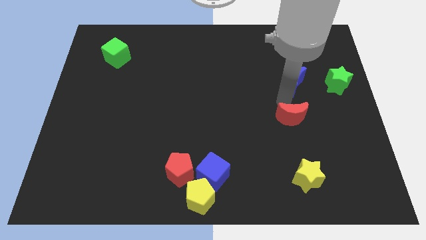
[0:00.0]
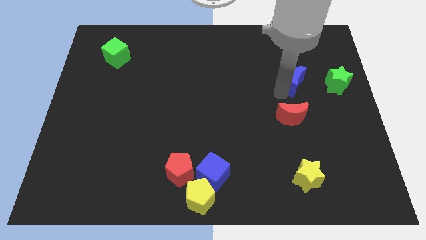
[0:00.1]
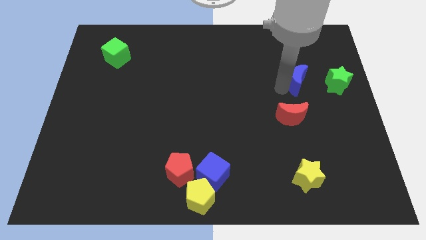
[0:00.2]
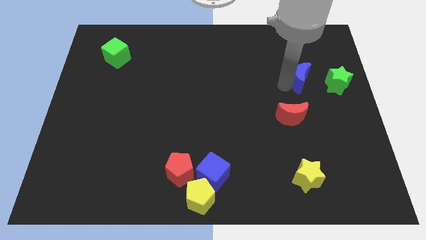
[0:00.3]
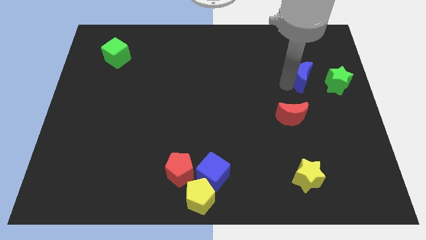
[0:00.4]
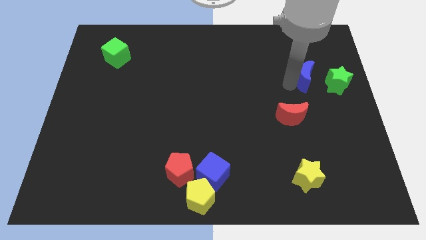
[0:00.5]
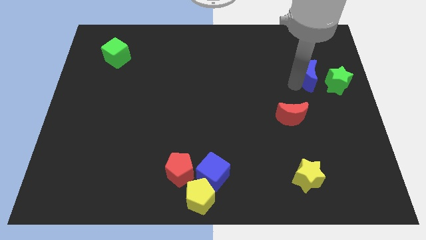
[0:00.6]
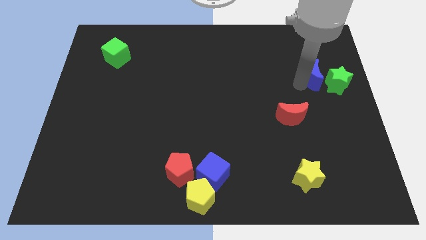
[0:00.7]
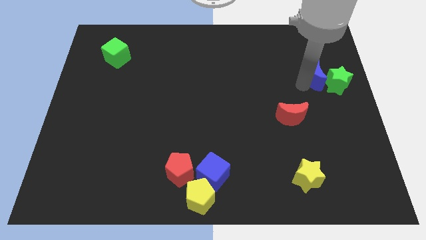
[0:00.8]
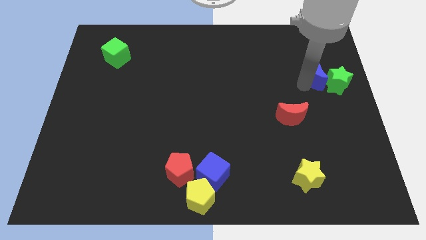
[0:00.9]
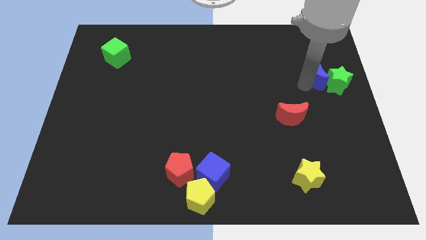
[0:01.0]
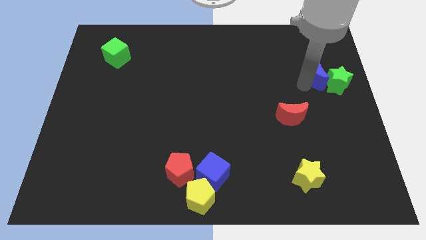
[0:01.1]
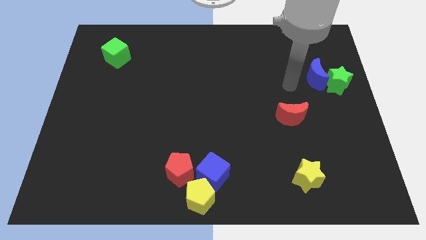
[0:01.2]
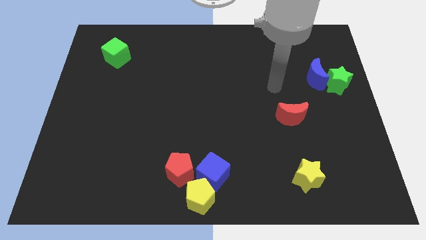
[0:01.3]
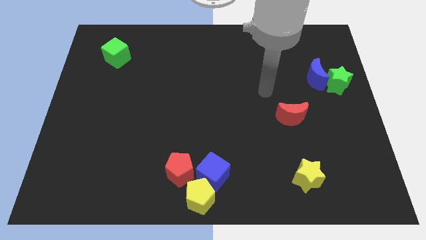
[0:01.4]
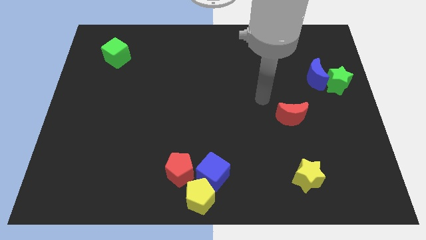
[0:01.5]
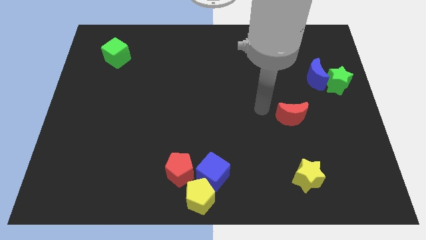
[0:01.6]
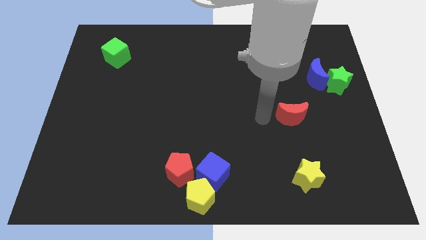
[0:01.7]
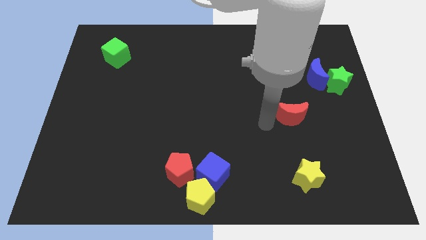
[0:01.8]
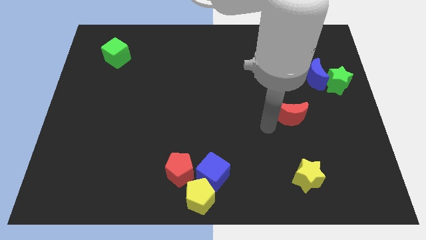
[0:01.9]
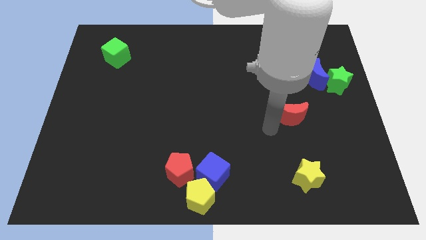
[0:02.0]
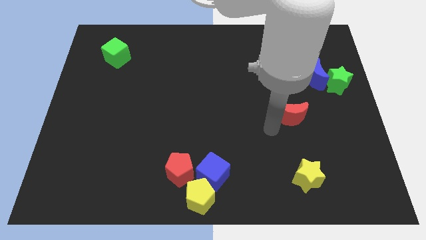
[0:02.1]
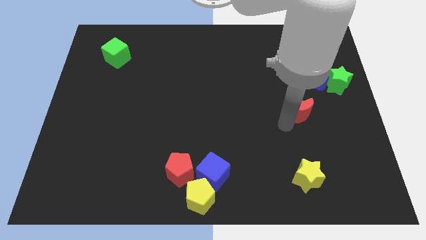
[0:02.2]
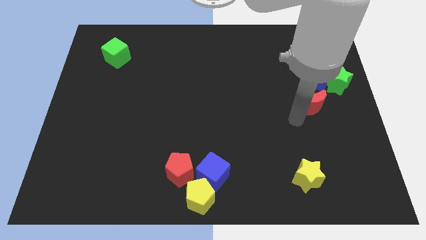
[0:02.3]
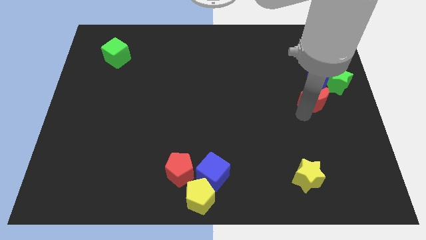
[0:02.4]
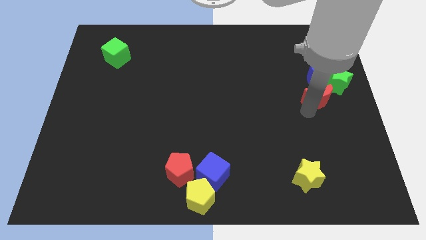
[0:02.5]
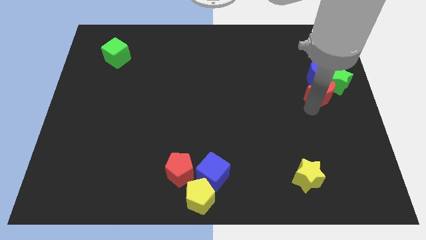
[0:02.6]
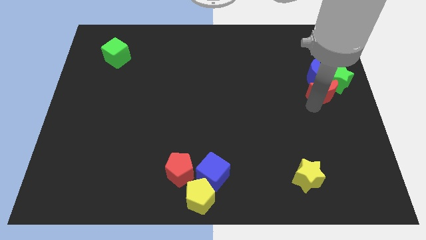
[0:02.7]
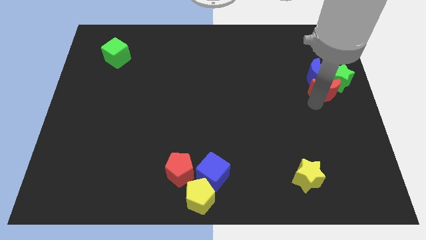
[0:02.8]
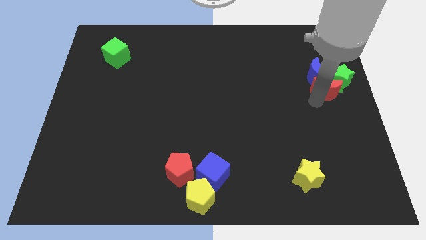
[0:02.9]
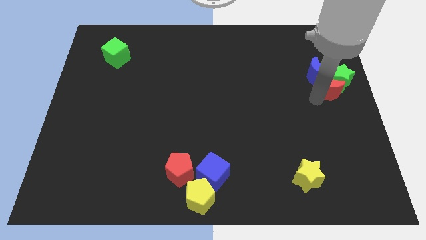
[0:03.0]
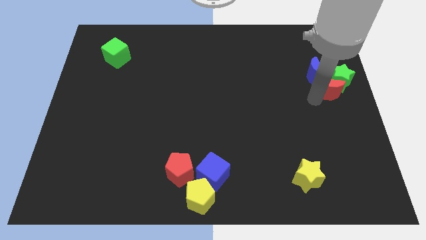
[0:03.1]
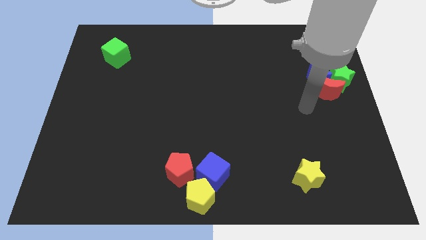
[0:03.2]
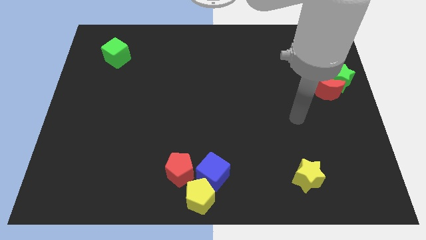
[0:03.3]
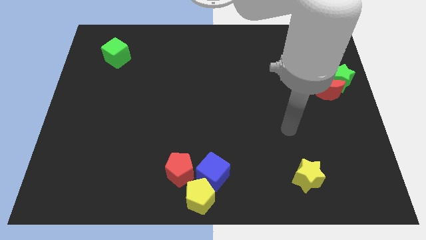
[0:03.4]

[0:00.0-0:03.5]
push the blue crescent and the red crescent into the green star

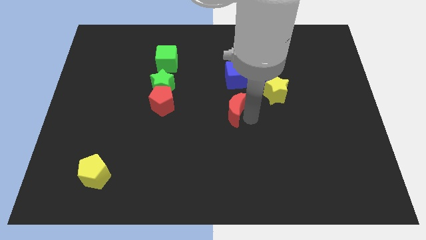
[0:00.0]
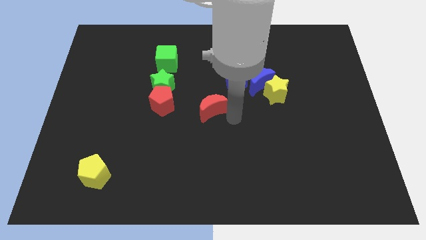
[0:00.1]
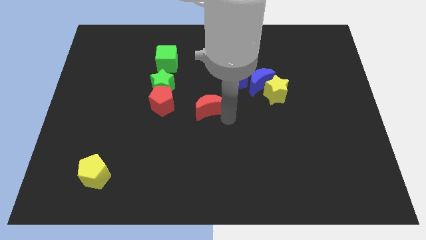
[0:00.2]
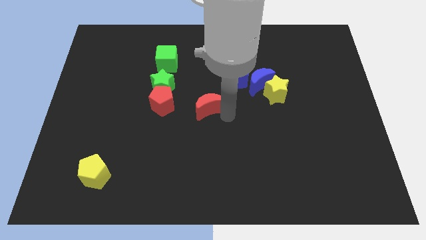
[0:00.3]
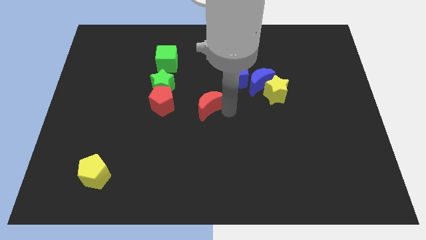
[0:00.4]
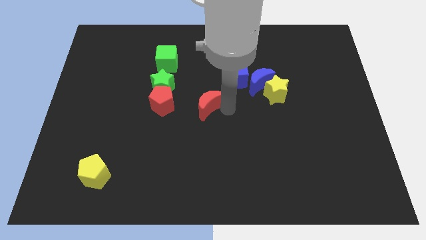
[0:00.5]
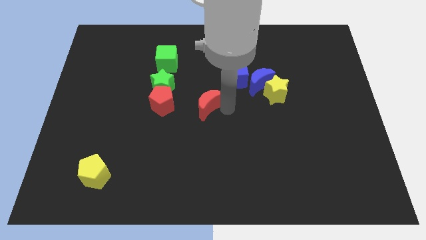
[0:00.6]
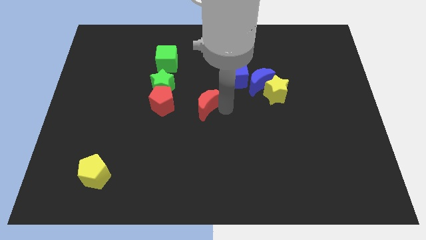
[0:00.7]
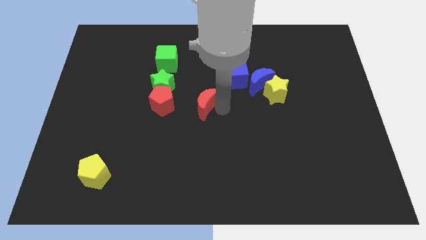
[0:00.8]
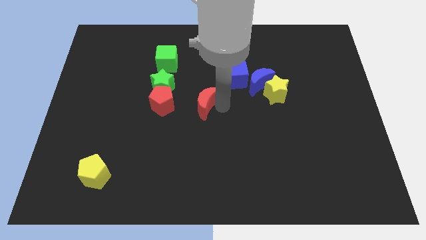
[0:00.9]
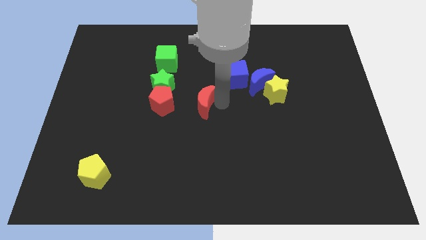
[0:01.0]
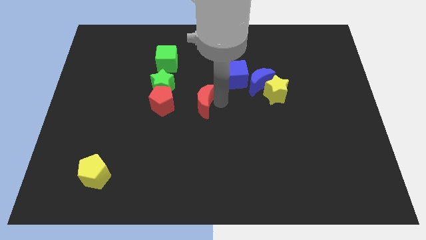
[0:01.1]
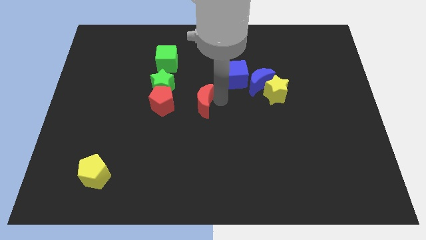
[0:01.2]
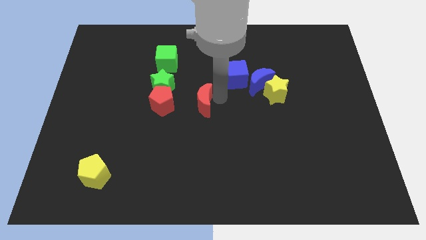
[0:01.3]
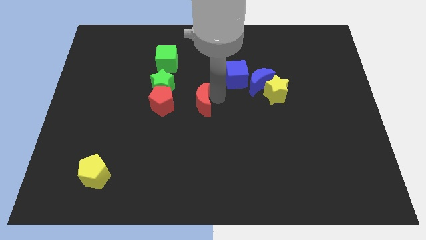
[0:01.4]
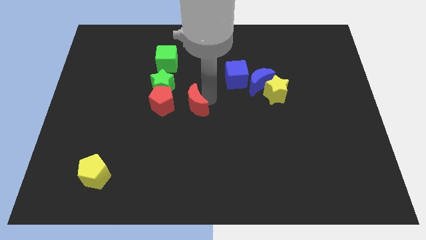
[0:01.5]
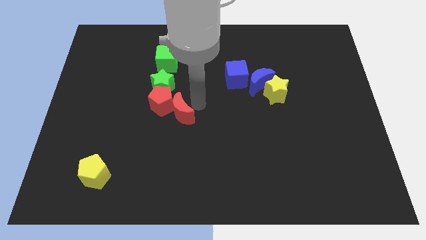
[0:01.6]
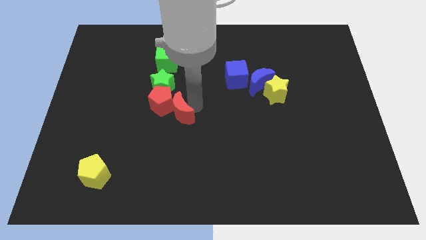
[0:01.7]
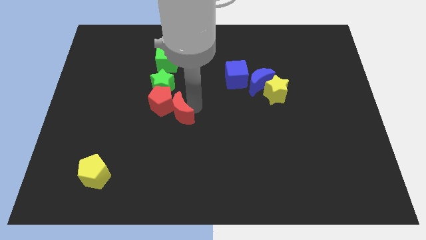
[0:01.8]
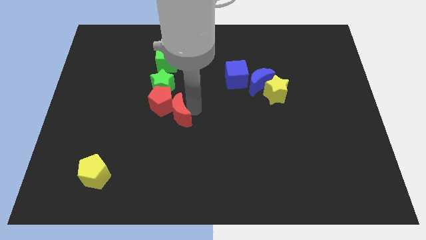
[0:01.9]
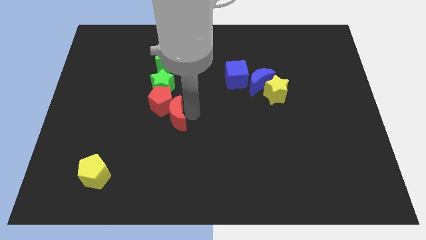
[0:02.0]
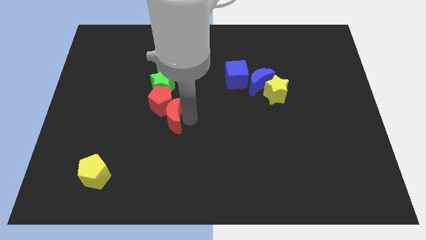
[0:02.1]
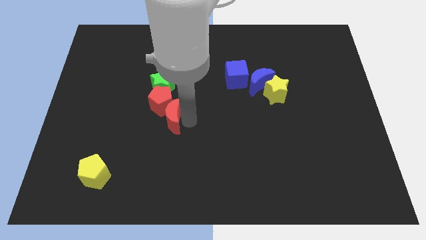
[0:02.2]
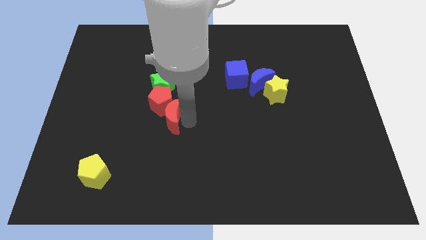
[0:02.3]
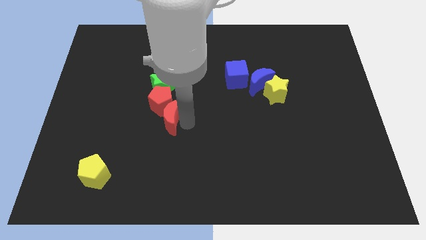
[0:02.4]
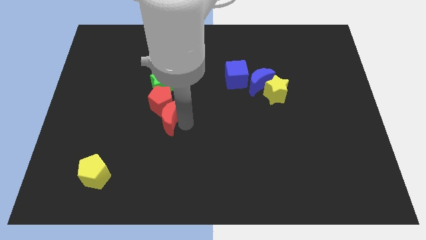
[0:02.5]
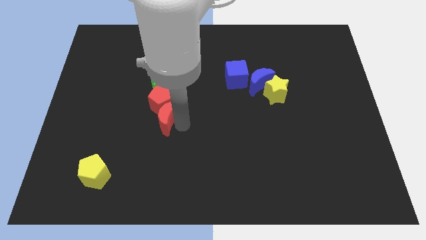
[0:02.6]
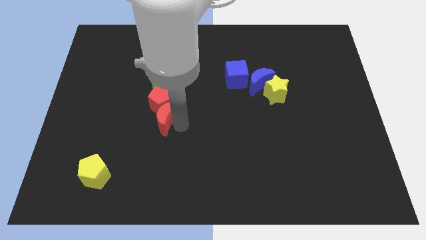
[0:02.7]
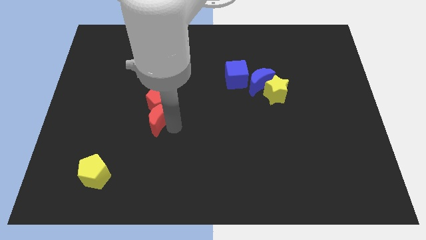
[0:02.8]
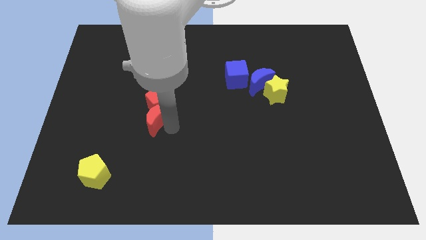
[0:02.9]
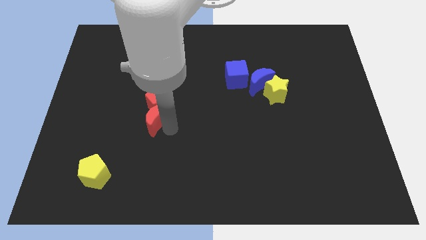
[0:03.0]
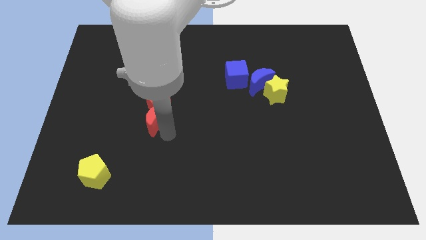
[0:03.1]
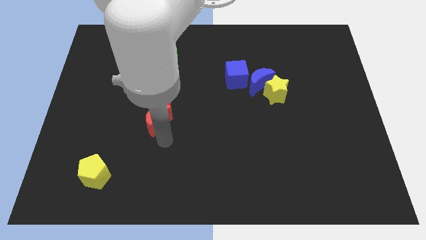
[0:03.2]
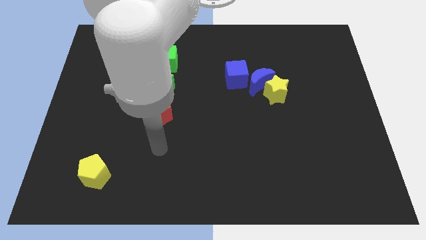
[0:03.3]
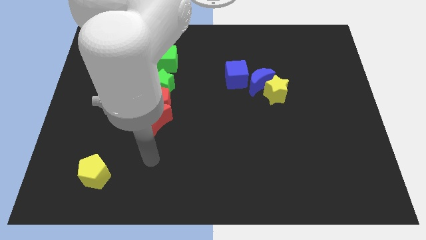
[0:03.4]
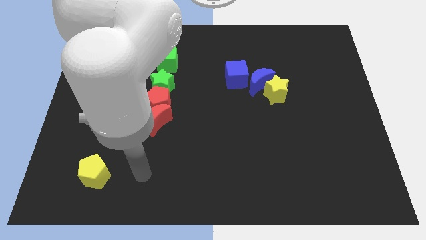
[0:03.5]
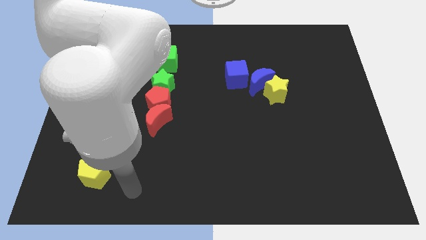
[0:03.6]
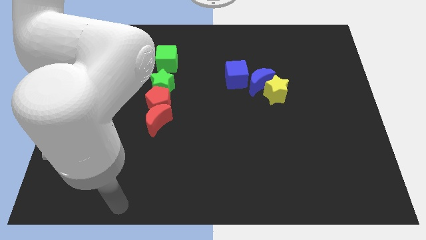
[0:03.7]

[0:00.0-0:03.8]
push the red moon into the red pentagon

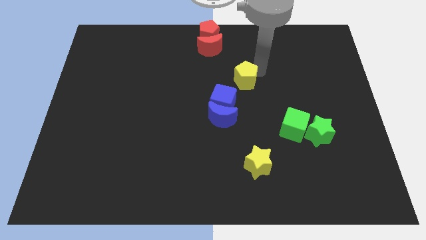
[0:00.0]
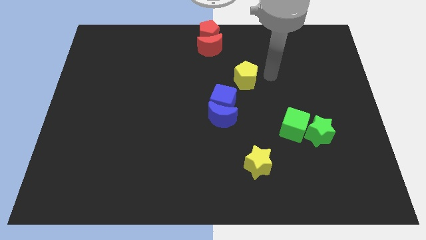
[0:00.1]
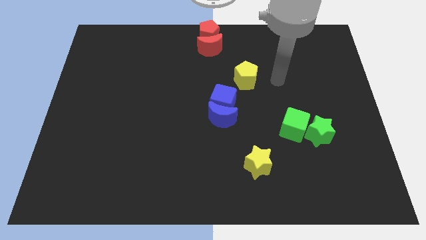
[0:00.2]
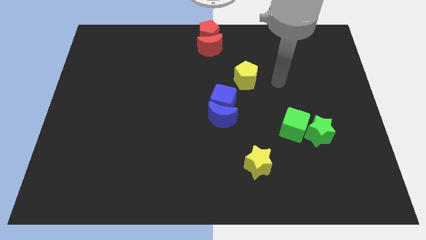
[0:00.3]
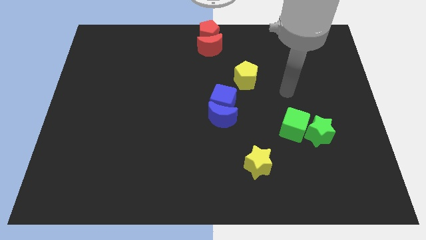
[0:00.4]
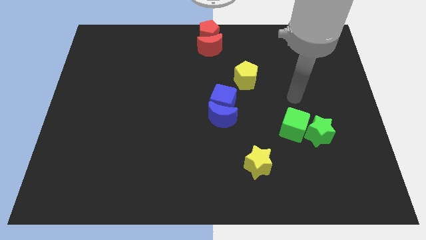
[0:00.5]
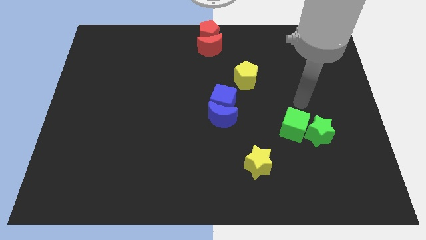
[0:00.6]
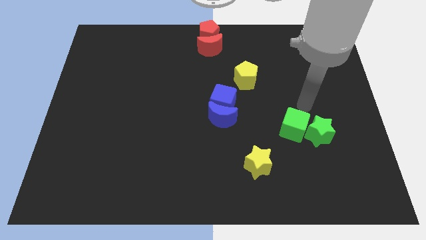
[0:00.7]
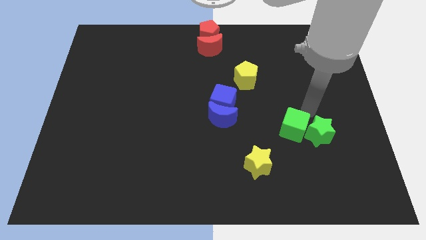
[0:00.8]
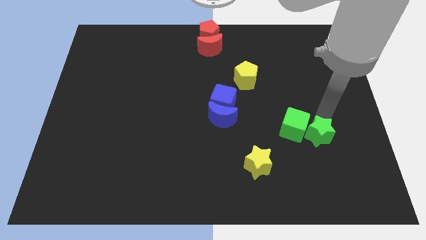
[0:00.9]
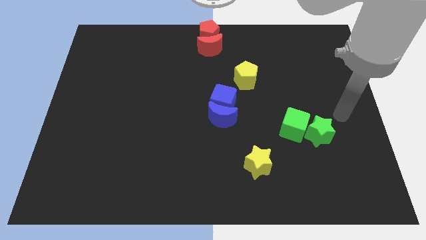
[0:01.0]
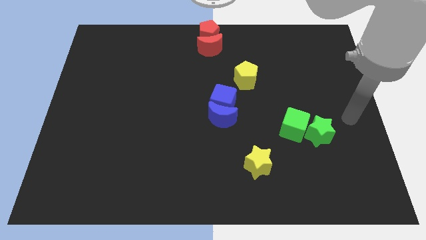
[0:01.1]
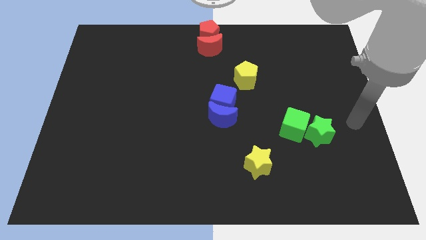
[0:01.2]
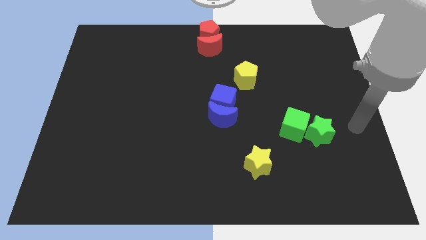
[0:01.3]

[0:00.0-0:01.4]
place the arm close to the green star

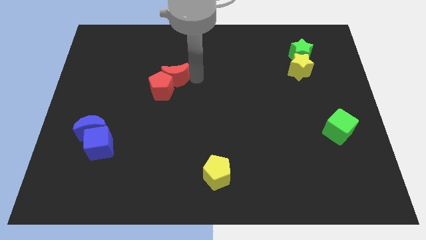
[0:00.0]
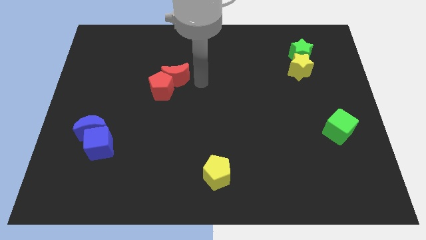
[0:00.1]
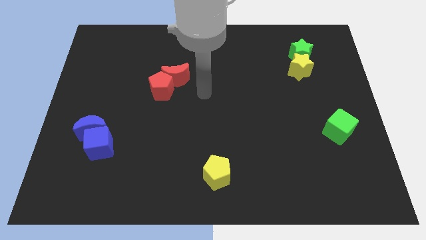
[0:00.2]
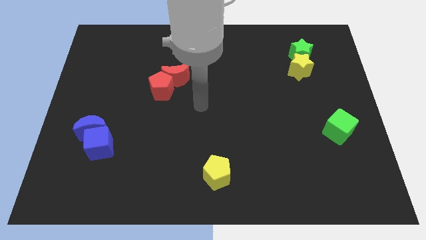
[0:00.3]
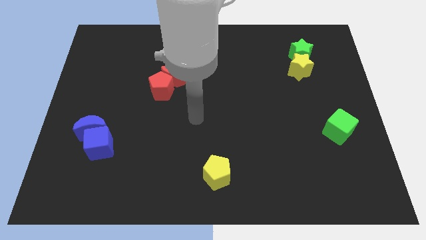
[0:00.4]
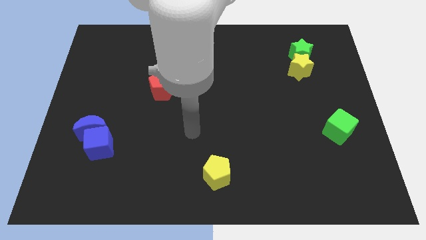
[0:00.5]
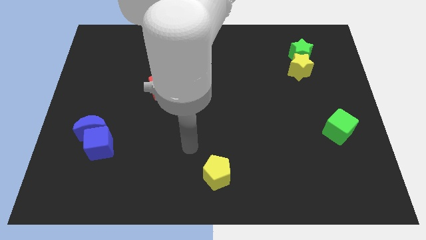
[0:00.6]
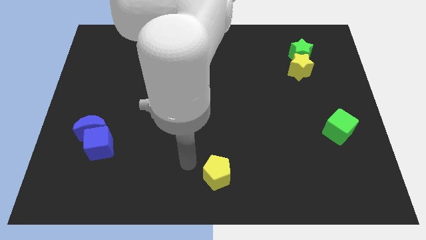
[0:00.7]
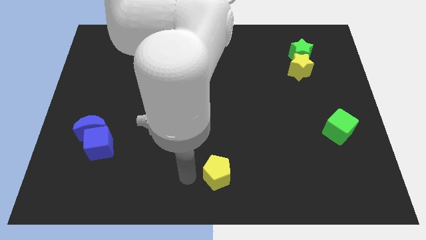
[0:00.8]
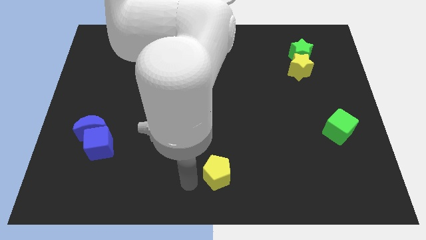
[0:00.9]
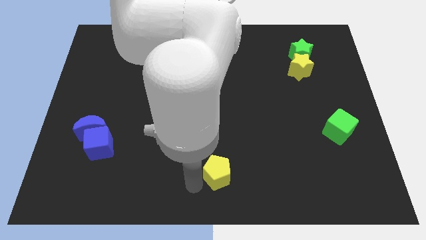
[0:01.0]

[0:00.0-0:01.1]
move your arm to the left of the yellow pentagon
